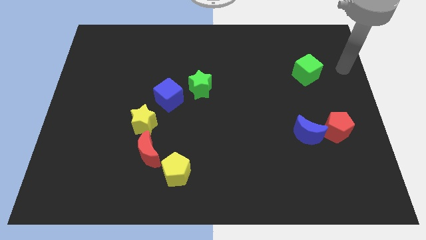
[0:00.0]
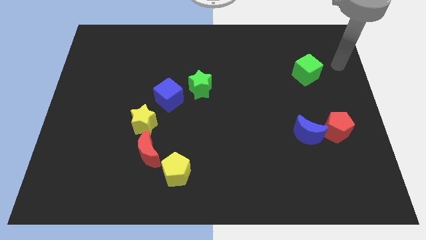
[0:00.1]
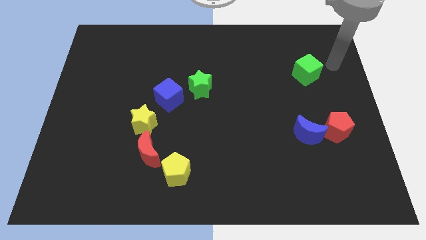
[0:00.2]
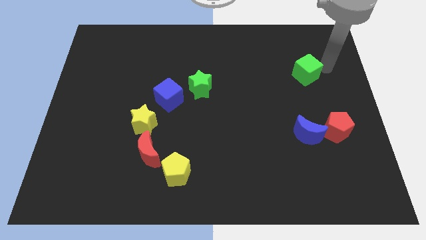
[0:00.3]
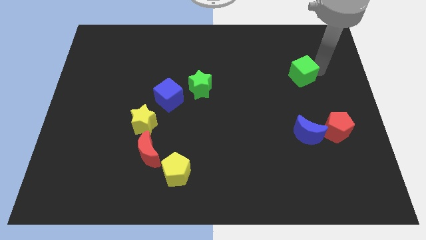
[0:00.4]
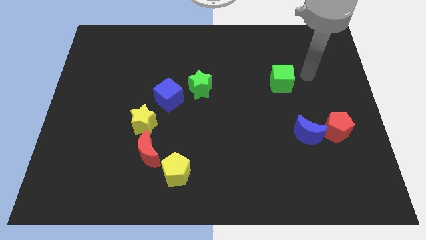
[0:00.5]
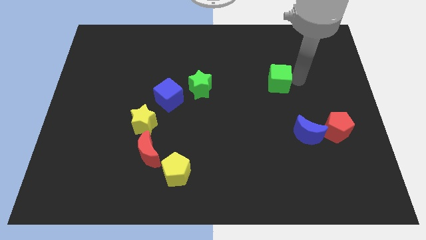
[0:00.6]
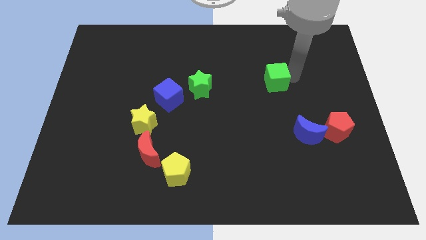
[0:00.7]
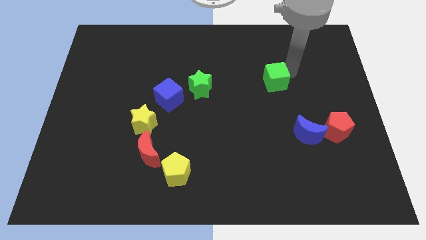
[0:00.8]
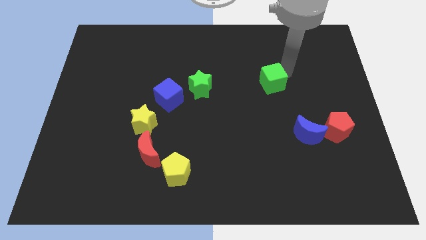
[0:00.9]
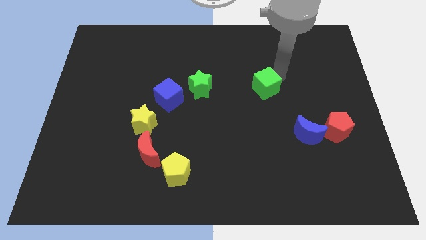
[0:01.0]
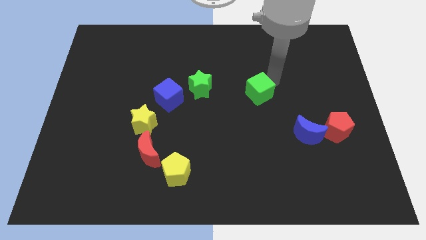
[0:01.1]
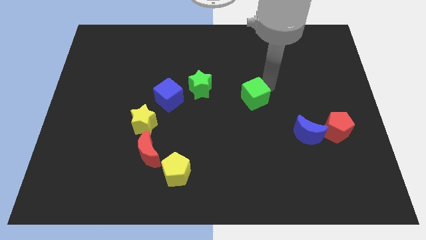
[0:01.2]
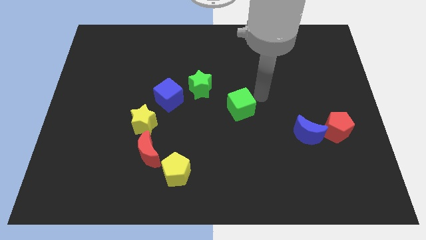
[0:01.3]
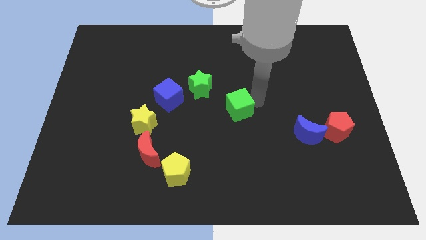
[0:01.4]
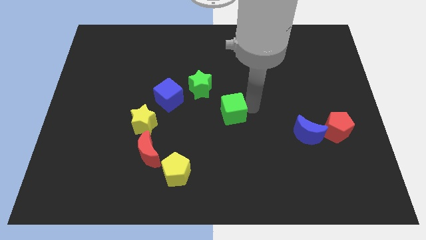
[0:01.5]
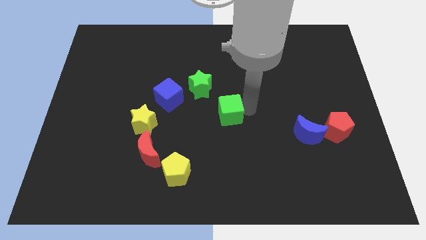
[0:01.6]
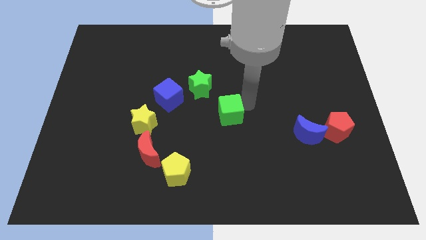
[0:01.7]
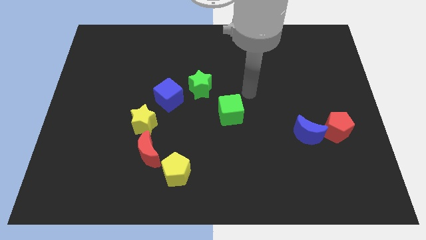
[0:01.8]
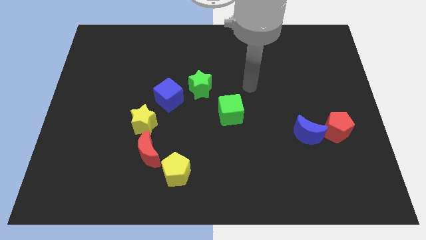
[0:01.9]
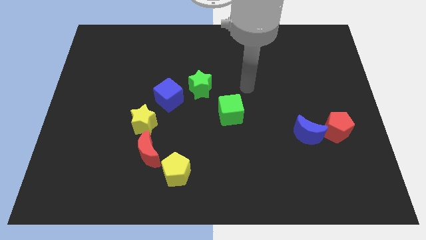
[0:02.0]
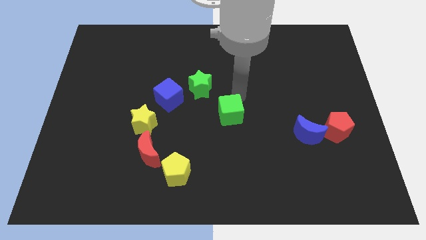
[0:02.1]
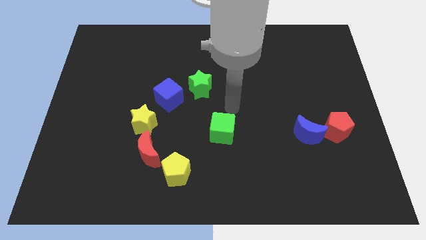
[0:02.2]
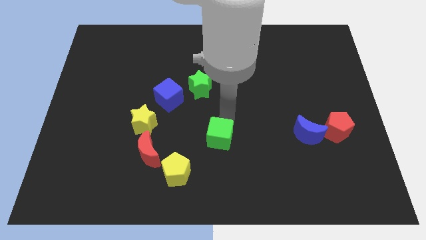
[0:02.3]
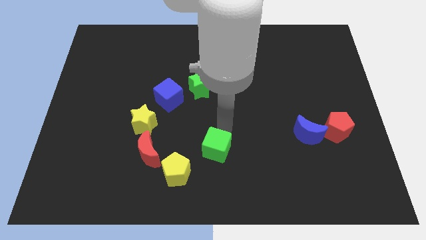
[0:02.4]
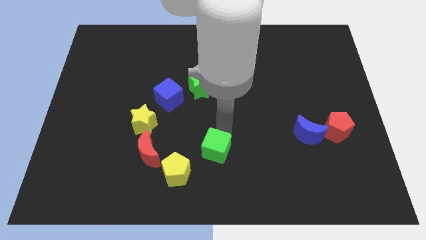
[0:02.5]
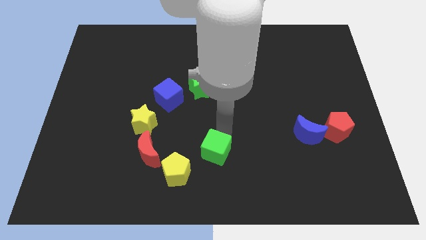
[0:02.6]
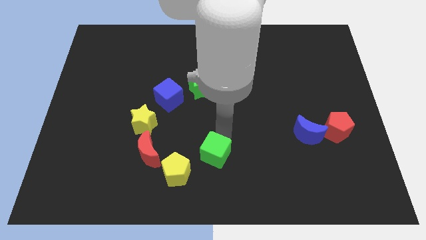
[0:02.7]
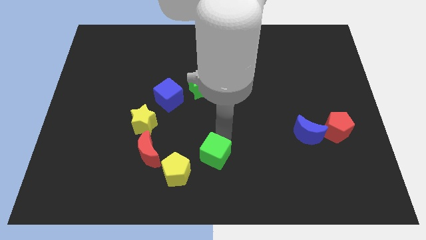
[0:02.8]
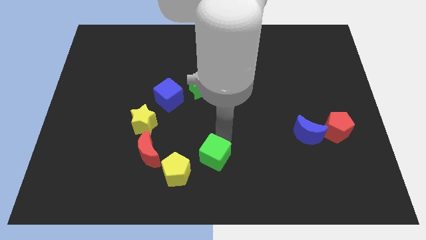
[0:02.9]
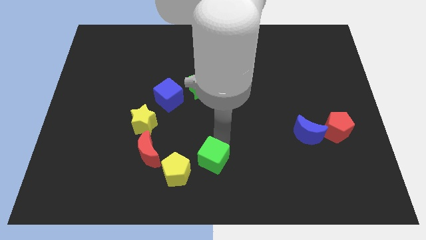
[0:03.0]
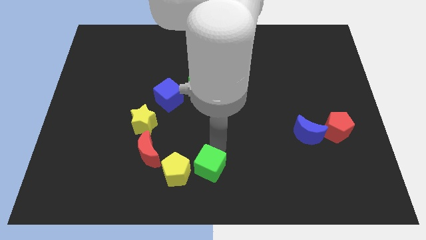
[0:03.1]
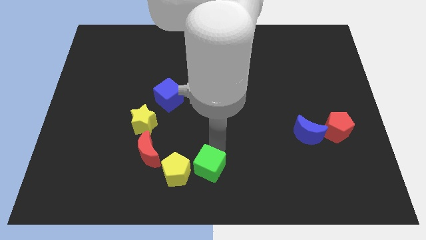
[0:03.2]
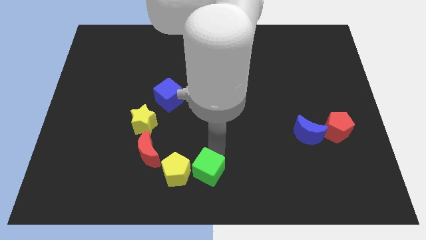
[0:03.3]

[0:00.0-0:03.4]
place the green cube right to the yellow pentagon

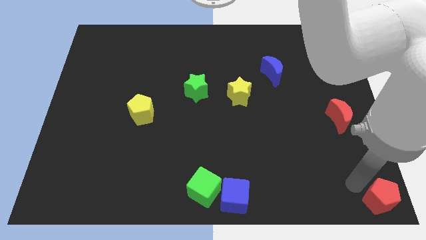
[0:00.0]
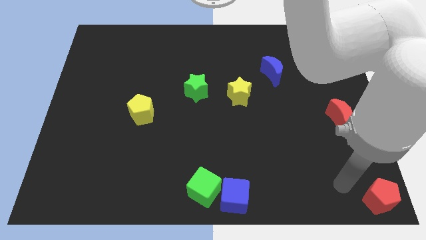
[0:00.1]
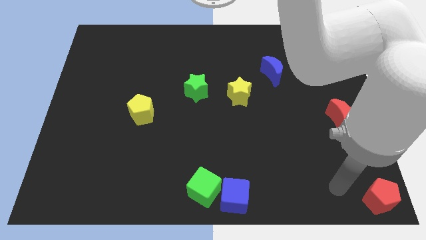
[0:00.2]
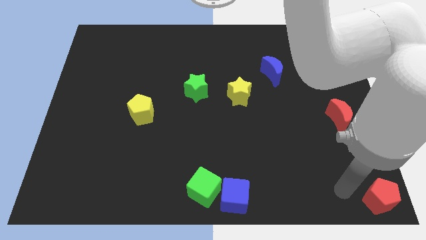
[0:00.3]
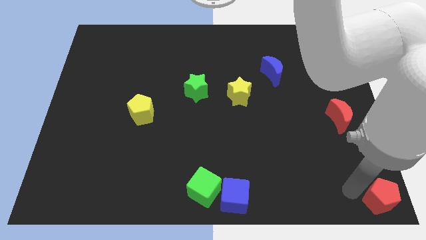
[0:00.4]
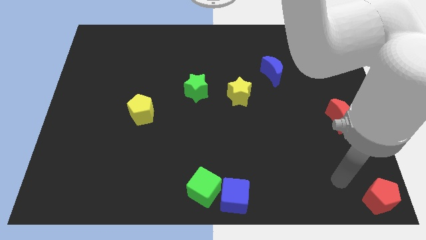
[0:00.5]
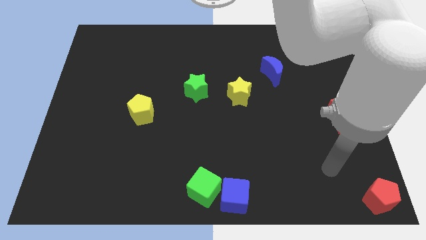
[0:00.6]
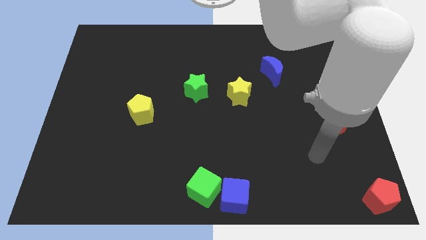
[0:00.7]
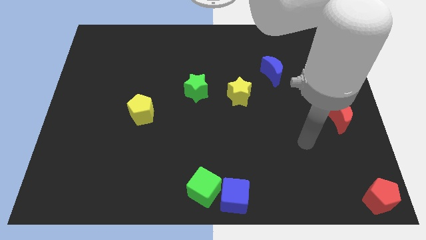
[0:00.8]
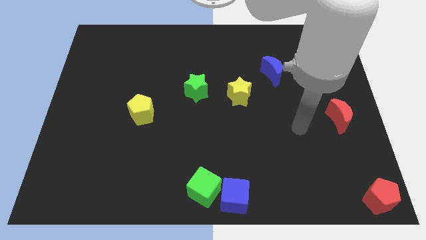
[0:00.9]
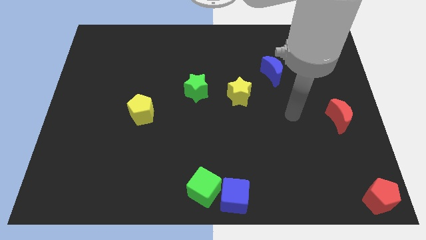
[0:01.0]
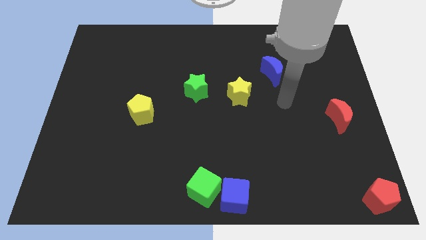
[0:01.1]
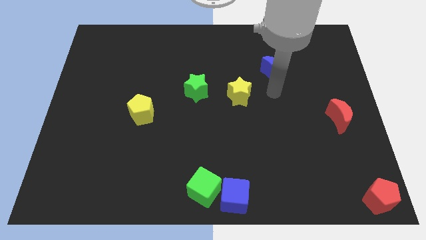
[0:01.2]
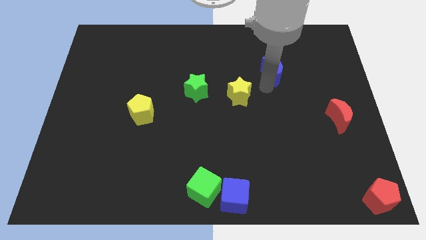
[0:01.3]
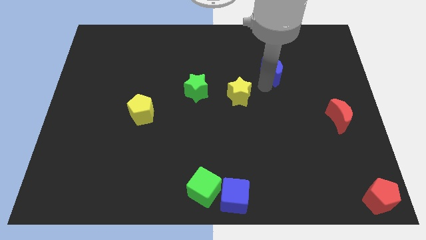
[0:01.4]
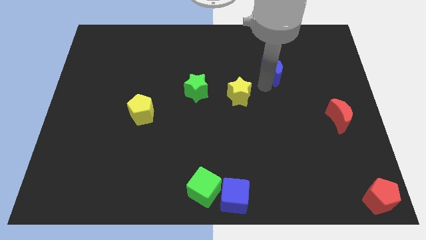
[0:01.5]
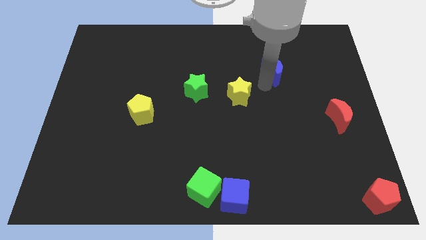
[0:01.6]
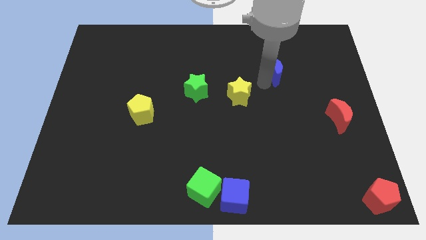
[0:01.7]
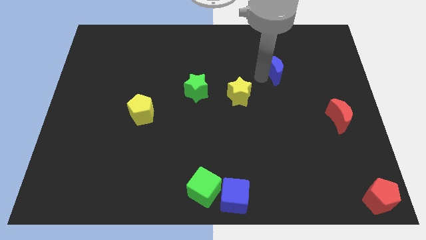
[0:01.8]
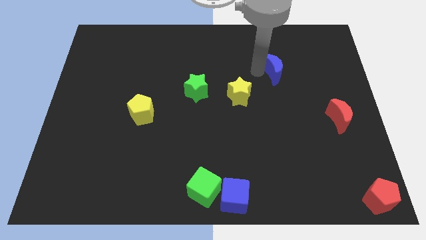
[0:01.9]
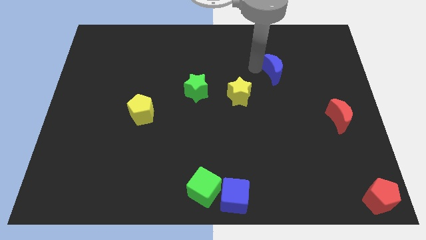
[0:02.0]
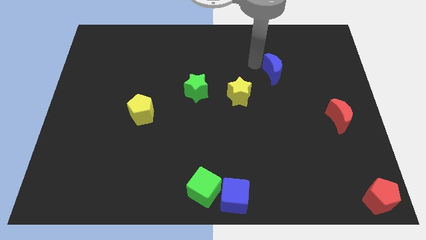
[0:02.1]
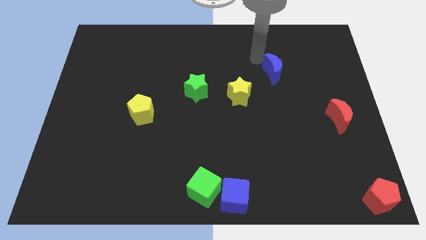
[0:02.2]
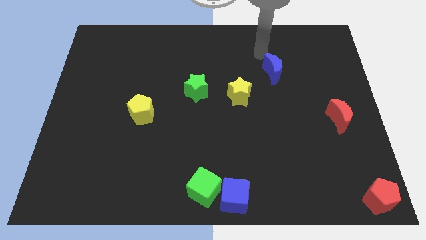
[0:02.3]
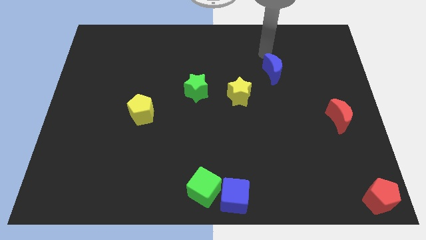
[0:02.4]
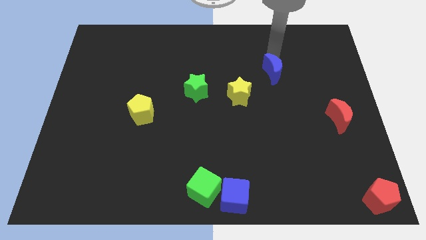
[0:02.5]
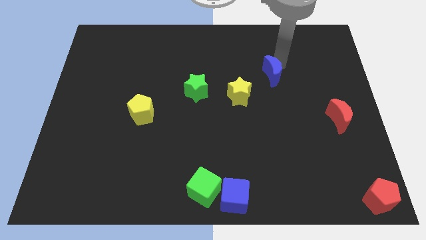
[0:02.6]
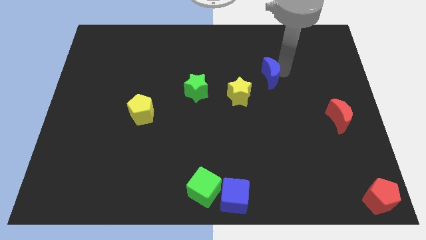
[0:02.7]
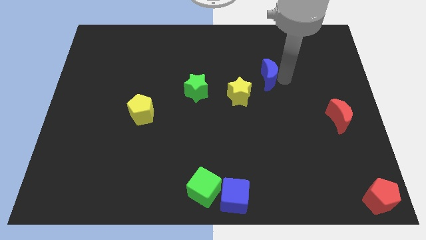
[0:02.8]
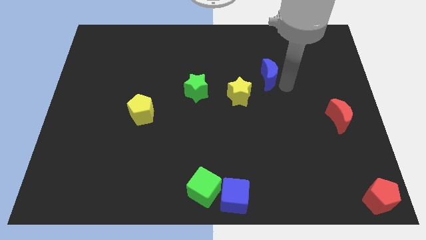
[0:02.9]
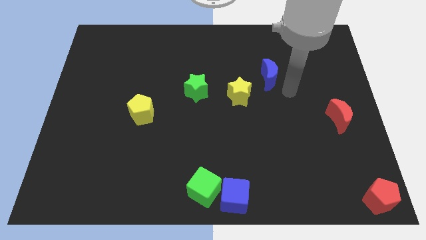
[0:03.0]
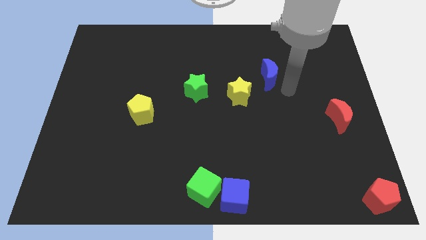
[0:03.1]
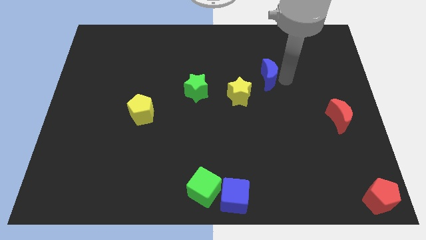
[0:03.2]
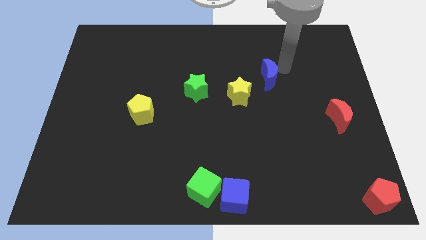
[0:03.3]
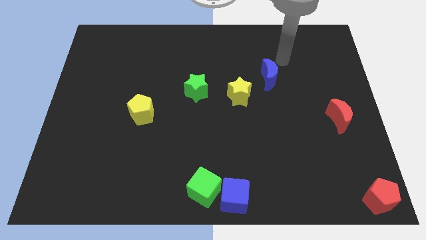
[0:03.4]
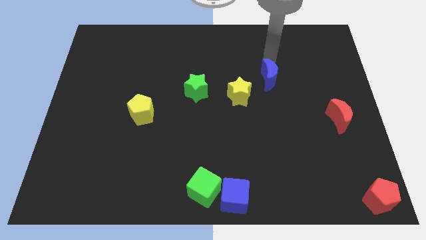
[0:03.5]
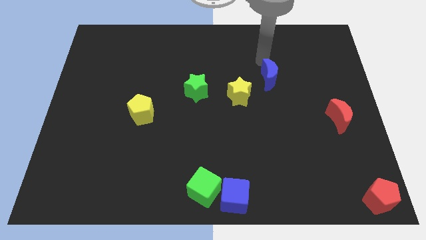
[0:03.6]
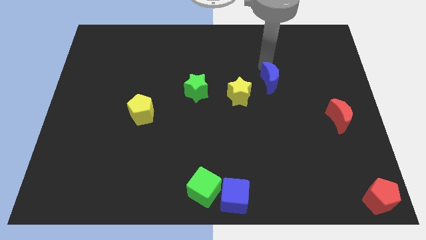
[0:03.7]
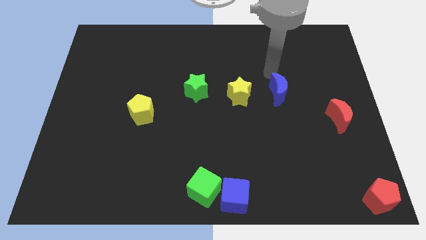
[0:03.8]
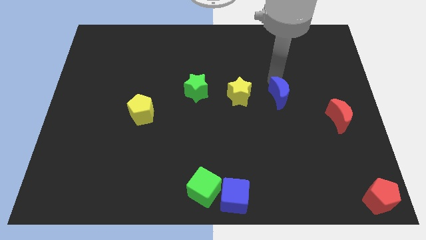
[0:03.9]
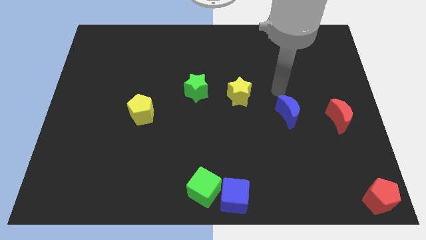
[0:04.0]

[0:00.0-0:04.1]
move the blue crscent to the left side of the red crescent

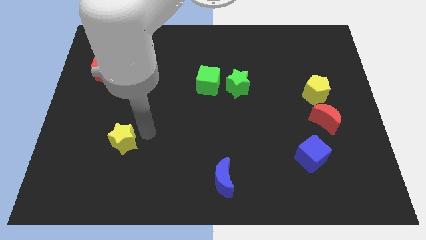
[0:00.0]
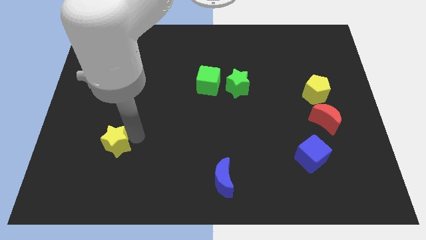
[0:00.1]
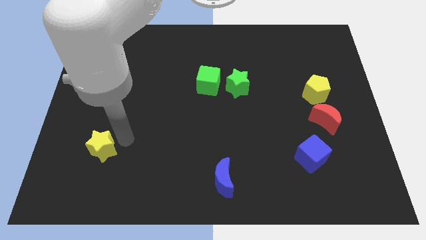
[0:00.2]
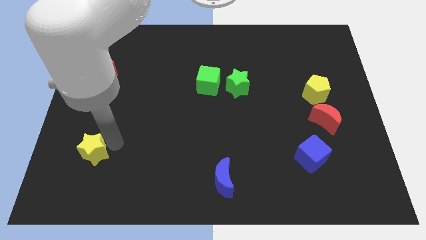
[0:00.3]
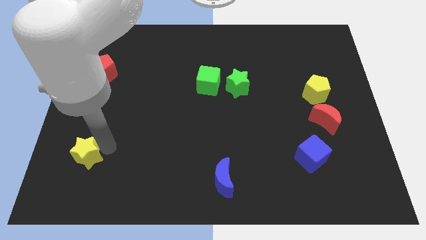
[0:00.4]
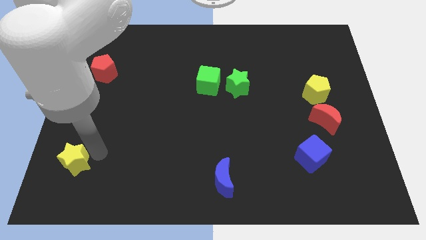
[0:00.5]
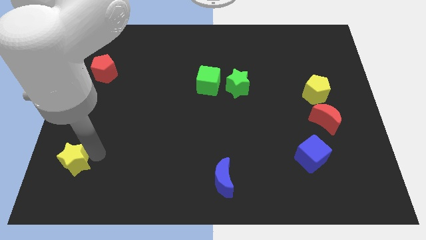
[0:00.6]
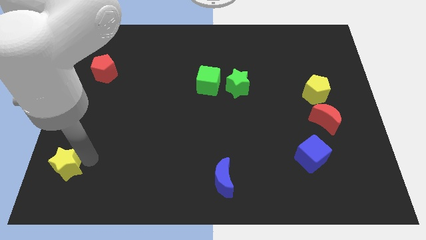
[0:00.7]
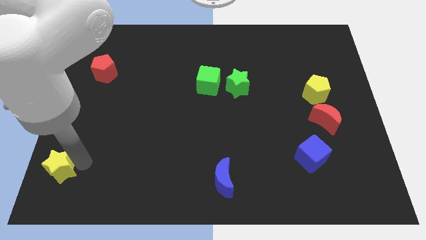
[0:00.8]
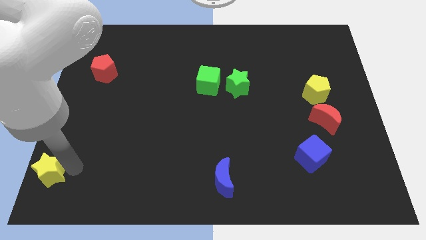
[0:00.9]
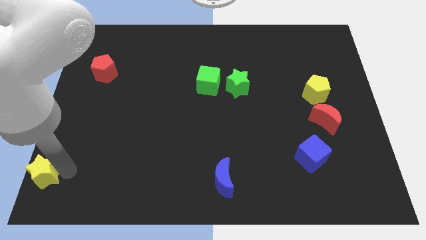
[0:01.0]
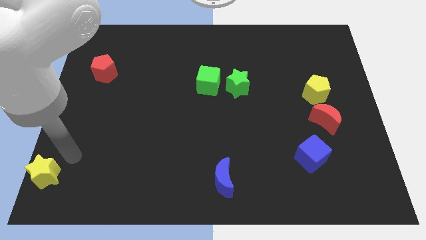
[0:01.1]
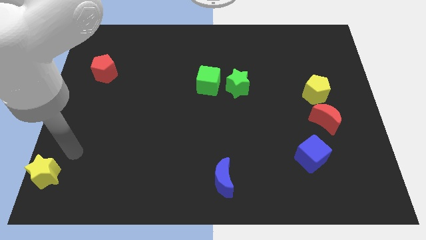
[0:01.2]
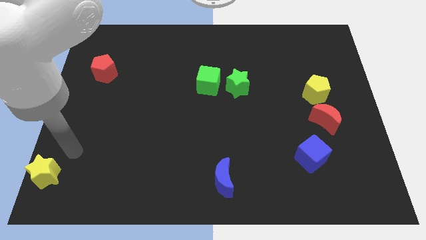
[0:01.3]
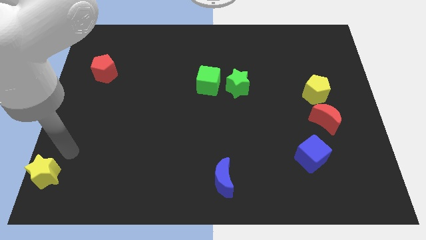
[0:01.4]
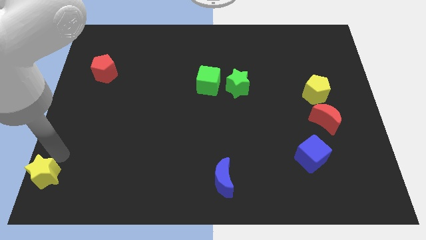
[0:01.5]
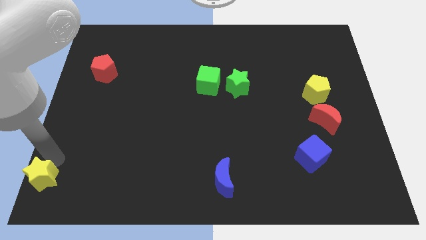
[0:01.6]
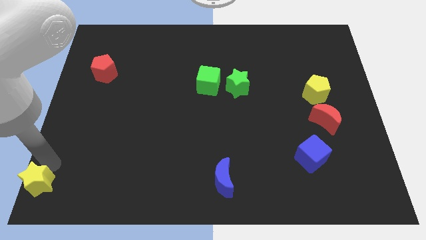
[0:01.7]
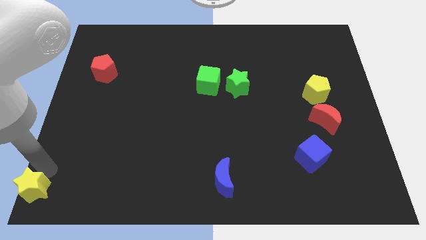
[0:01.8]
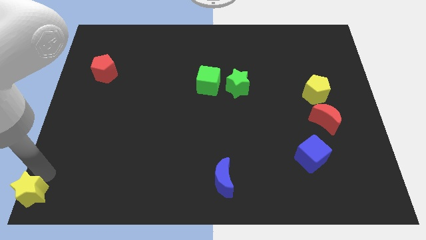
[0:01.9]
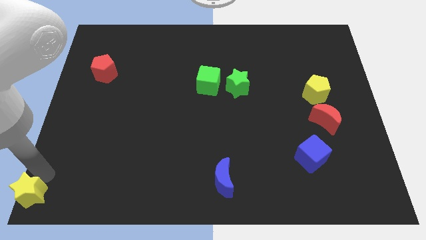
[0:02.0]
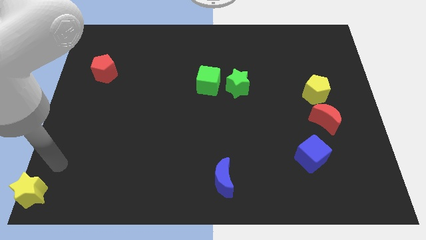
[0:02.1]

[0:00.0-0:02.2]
move the yellow star towards the bottom left
